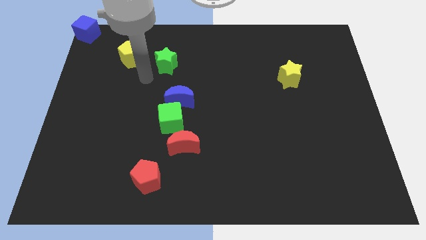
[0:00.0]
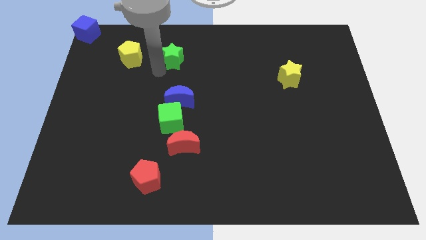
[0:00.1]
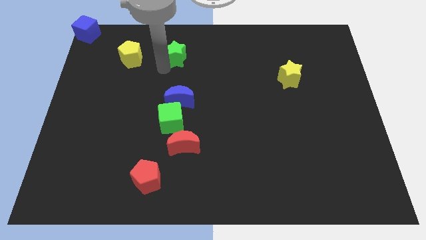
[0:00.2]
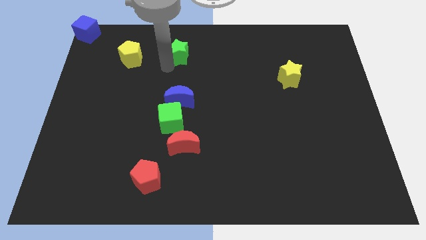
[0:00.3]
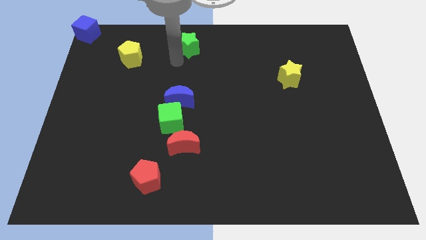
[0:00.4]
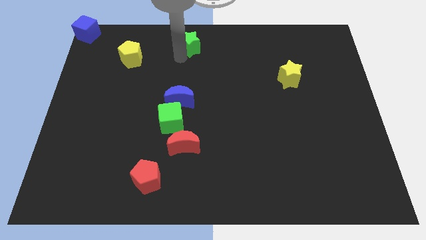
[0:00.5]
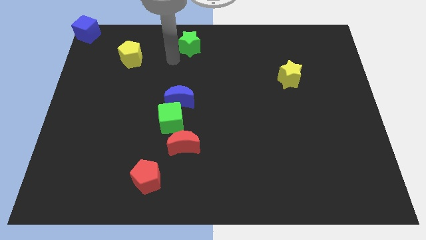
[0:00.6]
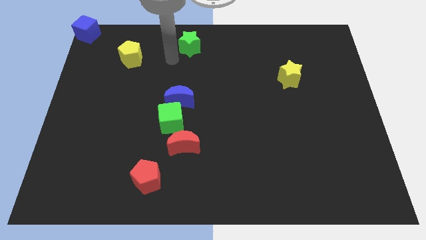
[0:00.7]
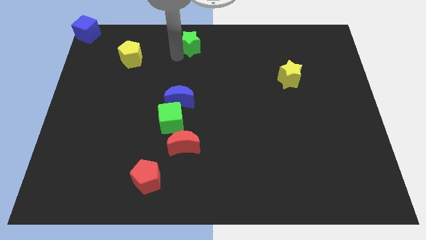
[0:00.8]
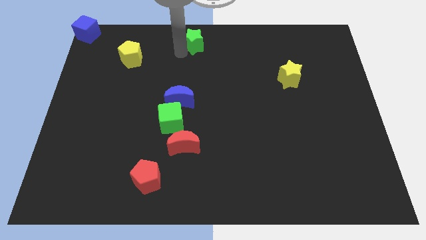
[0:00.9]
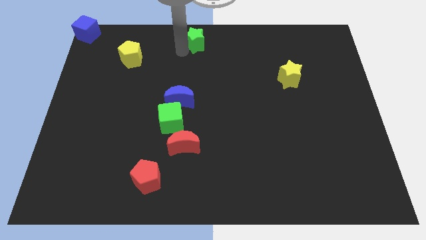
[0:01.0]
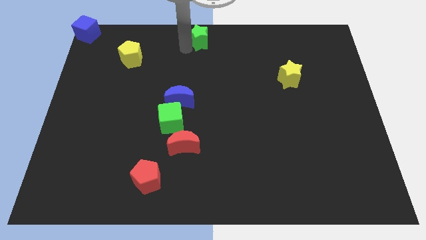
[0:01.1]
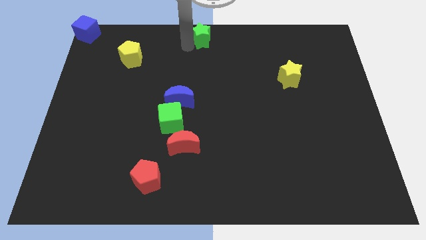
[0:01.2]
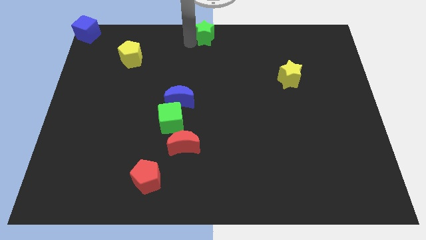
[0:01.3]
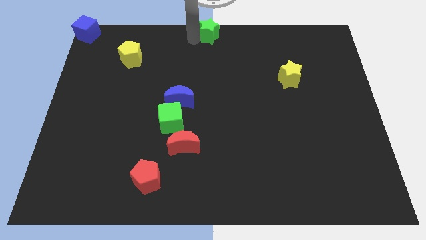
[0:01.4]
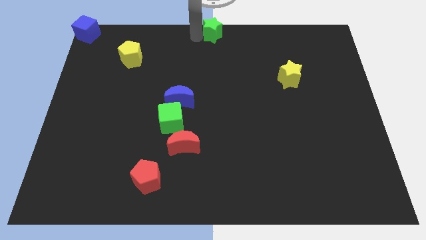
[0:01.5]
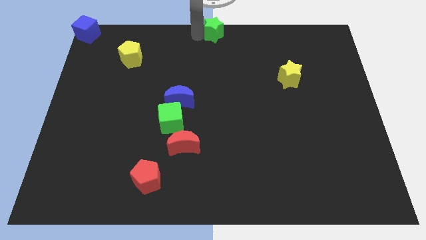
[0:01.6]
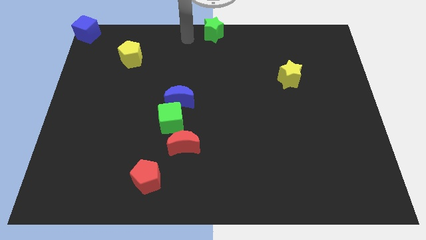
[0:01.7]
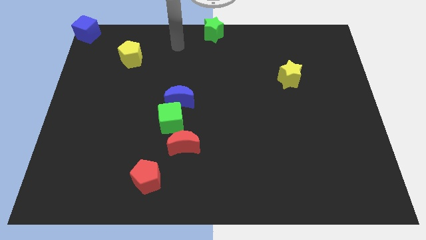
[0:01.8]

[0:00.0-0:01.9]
place the green star at top center of the board

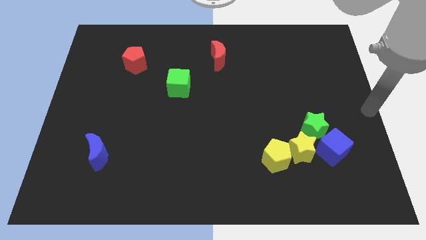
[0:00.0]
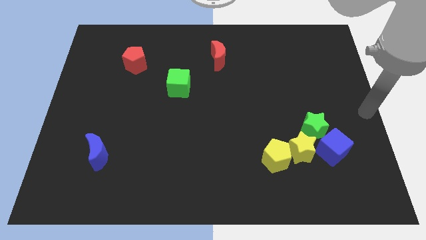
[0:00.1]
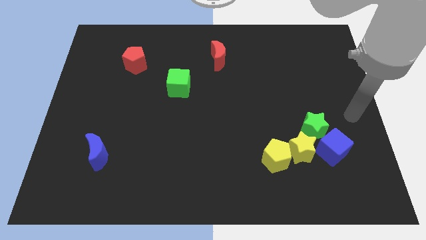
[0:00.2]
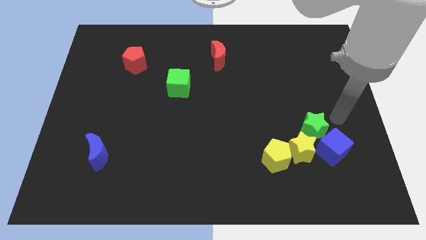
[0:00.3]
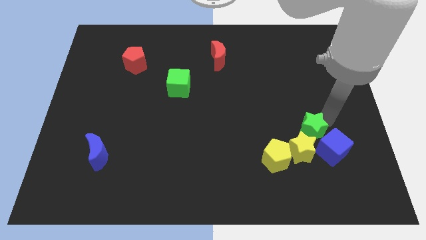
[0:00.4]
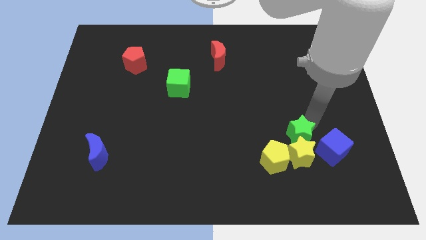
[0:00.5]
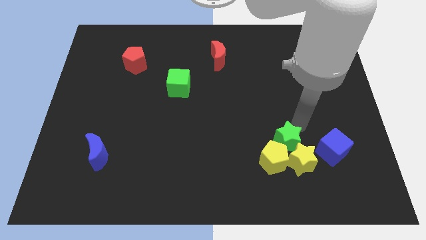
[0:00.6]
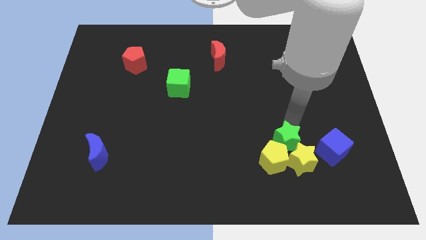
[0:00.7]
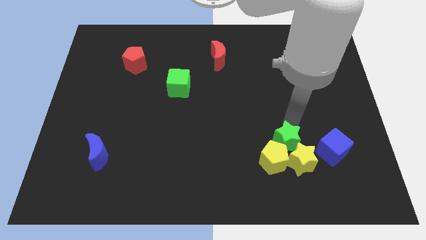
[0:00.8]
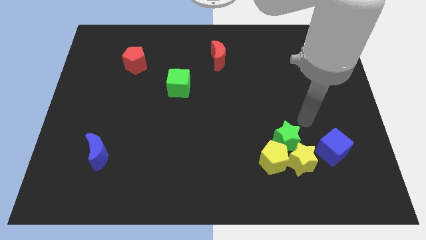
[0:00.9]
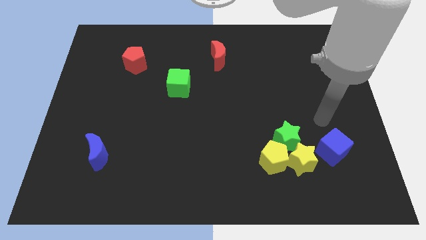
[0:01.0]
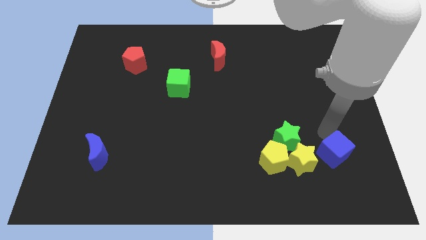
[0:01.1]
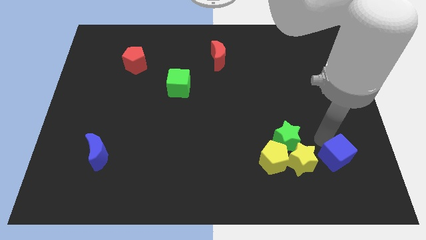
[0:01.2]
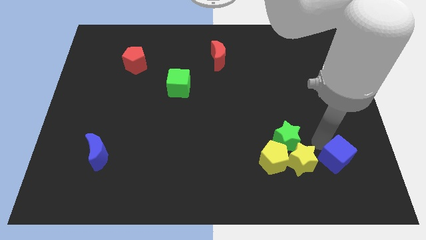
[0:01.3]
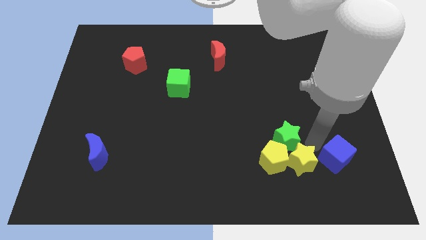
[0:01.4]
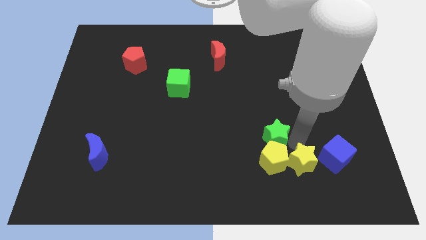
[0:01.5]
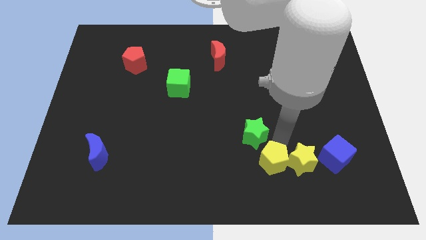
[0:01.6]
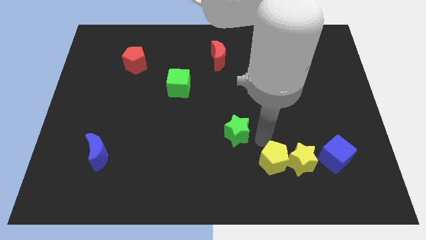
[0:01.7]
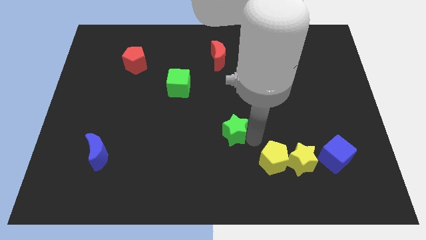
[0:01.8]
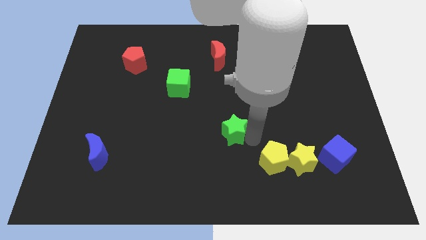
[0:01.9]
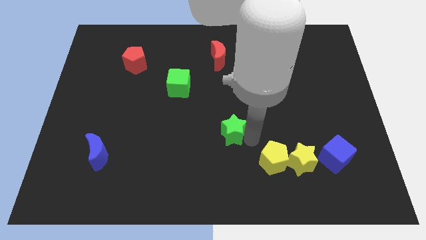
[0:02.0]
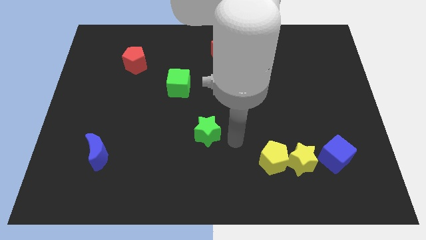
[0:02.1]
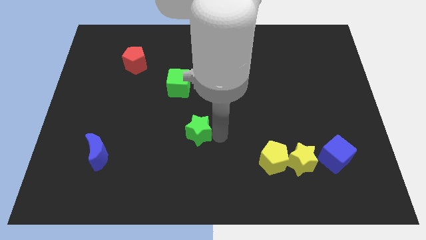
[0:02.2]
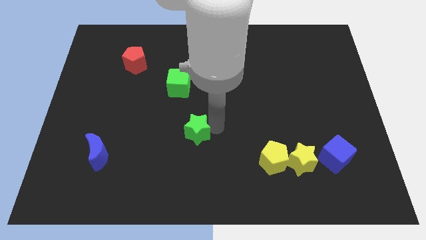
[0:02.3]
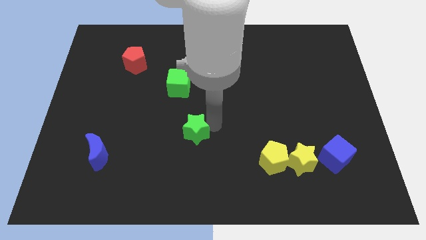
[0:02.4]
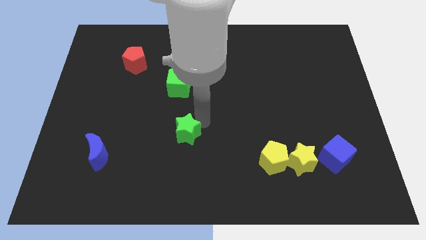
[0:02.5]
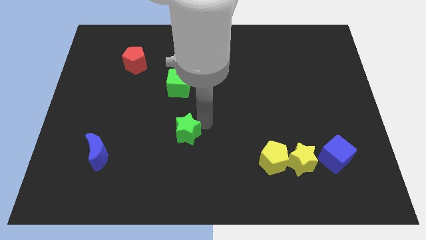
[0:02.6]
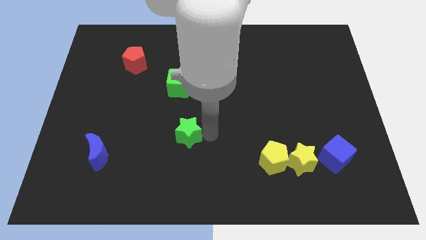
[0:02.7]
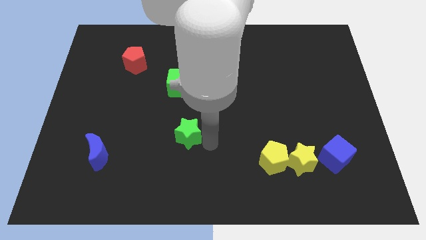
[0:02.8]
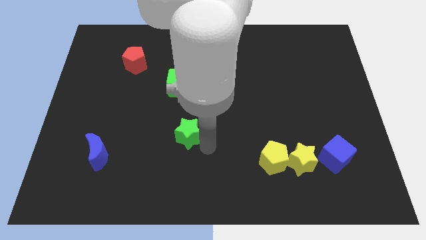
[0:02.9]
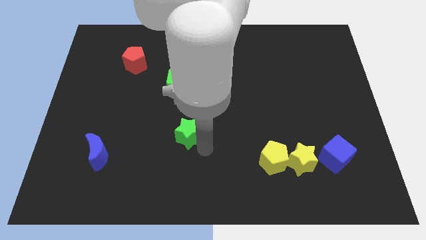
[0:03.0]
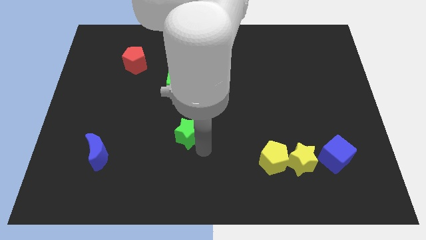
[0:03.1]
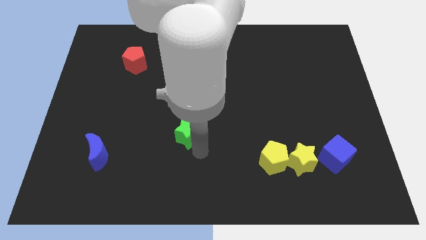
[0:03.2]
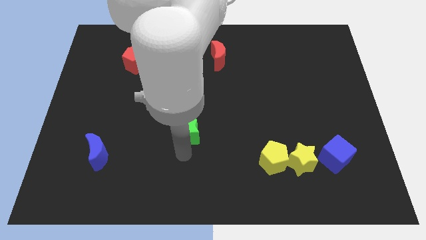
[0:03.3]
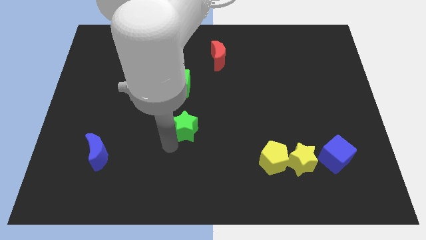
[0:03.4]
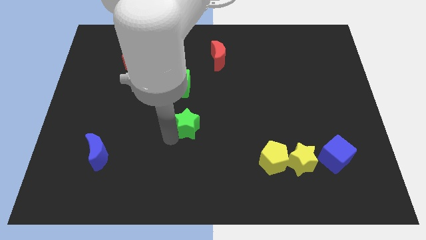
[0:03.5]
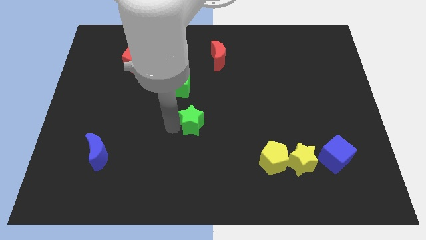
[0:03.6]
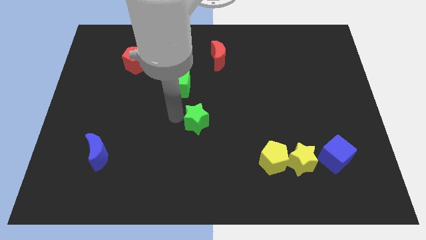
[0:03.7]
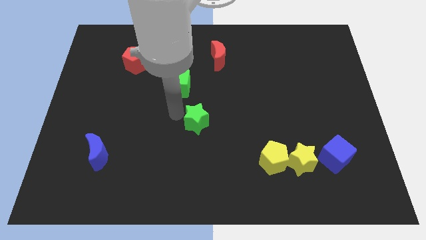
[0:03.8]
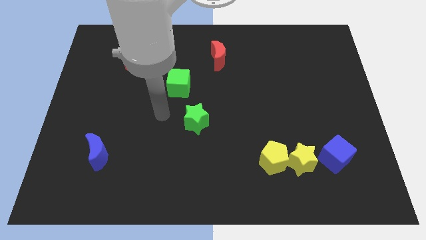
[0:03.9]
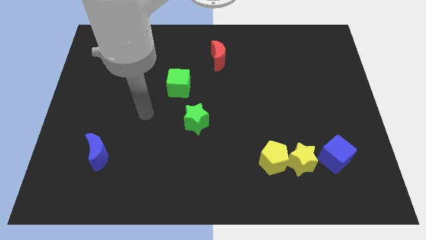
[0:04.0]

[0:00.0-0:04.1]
slide green star to the bottom right of green cube

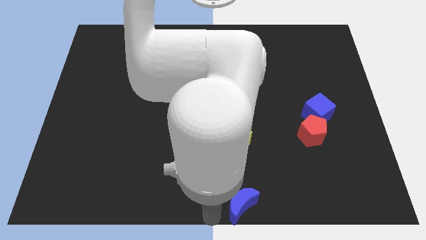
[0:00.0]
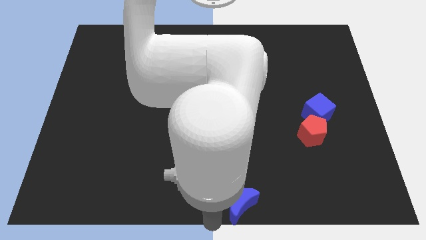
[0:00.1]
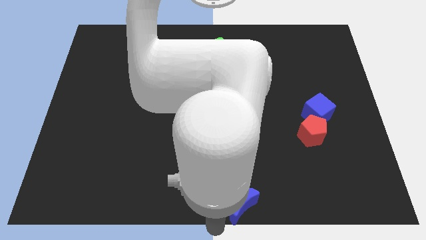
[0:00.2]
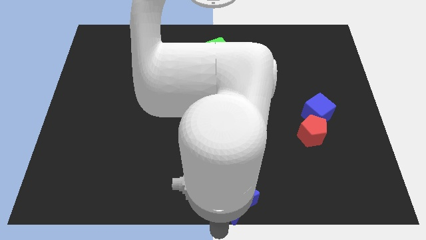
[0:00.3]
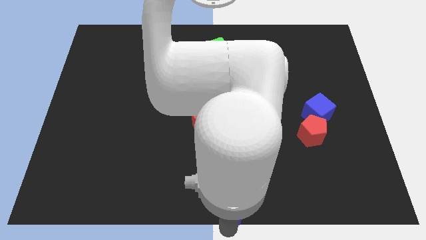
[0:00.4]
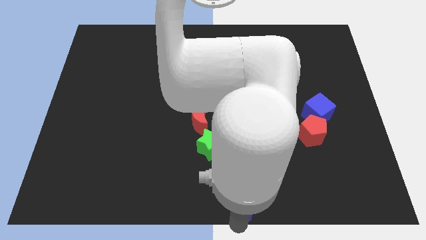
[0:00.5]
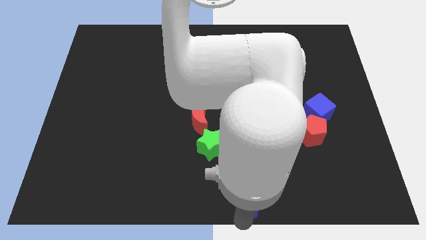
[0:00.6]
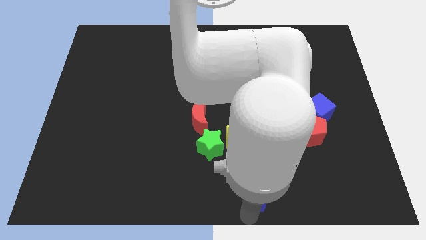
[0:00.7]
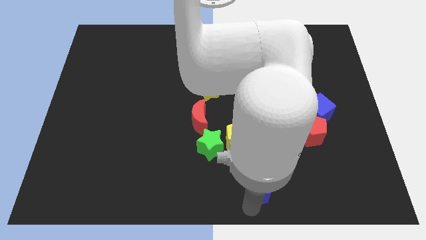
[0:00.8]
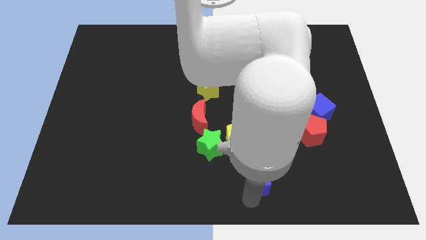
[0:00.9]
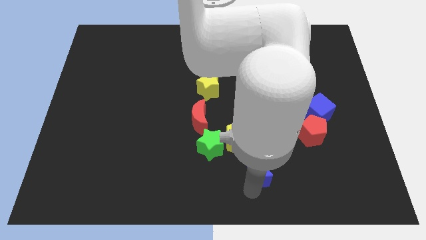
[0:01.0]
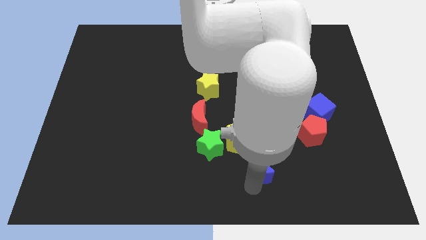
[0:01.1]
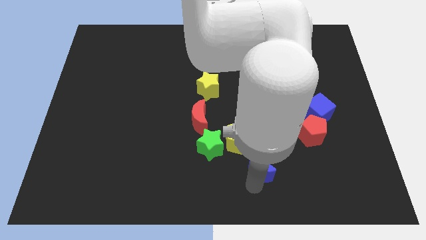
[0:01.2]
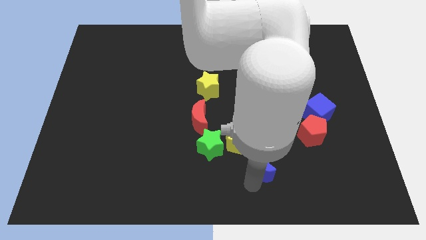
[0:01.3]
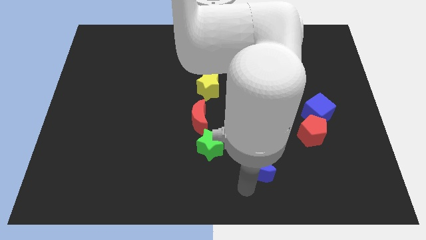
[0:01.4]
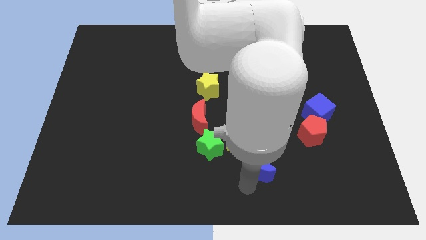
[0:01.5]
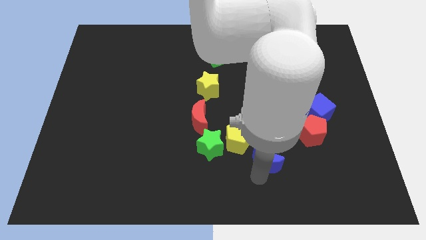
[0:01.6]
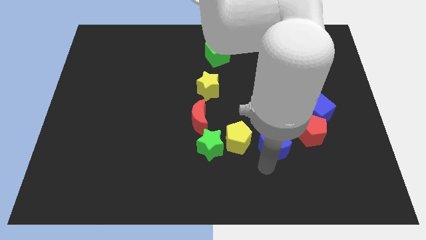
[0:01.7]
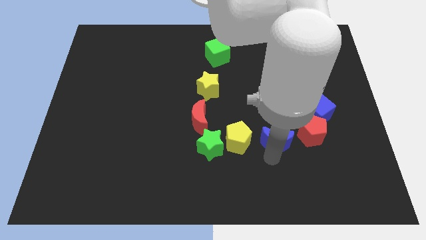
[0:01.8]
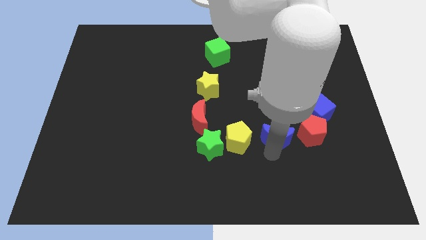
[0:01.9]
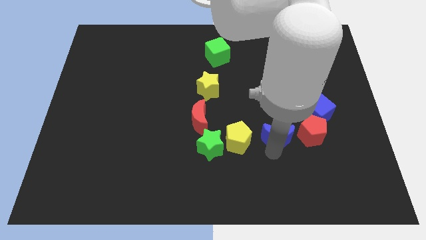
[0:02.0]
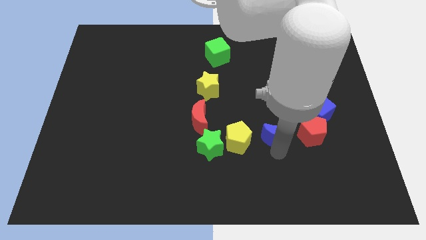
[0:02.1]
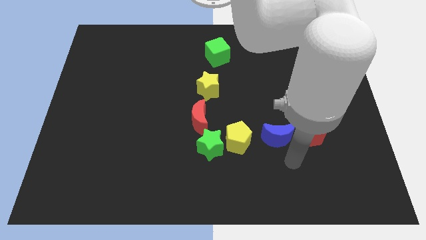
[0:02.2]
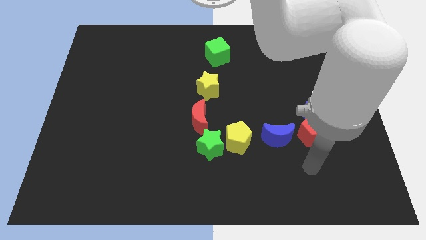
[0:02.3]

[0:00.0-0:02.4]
move the blue crescent in between red pentagon and yellow pentagon

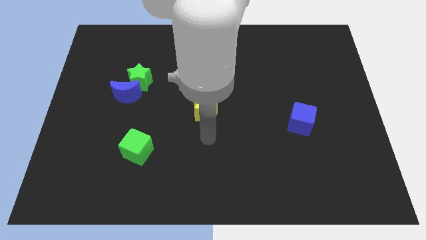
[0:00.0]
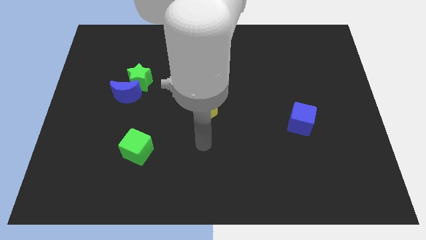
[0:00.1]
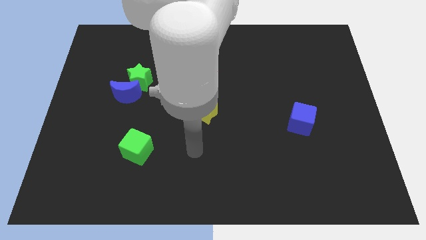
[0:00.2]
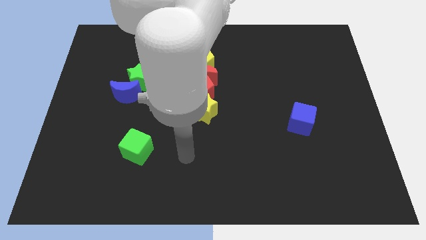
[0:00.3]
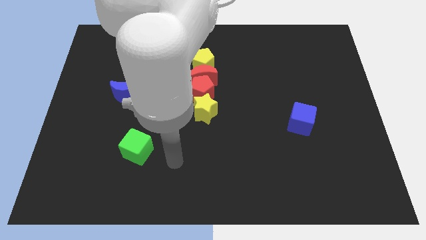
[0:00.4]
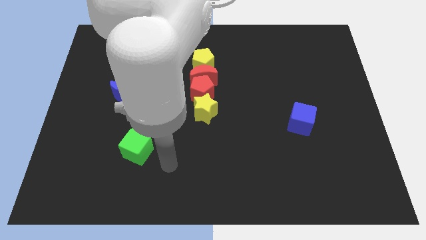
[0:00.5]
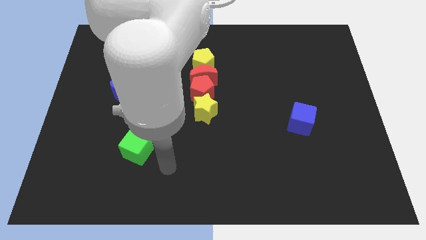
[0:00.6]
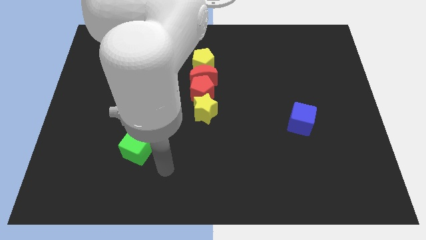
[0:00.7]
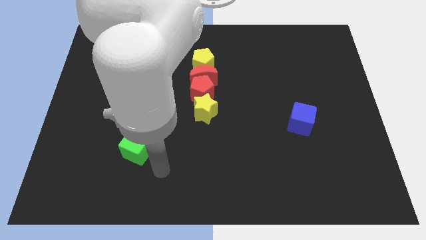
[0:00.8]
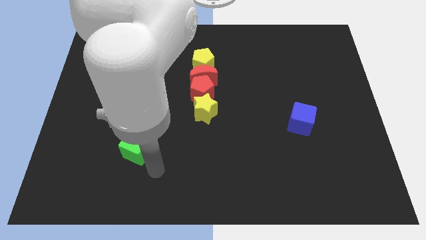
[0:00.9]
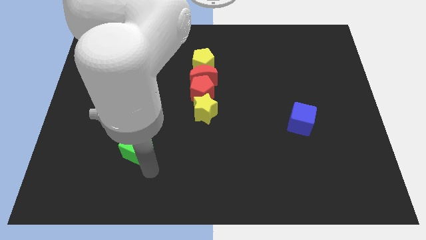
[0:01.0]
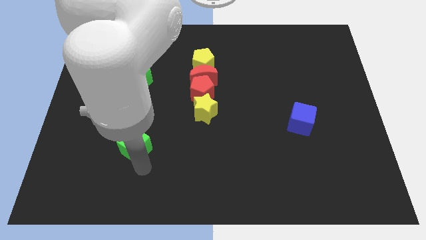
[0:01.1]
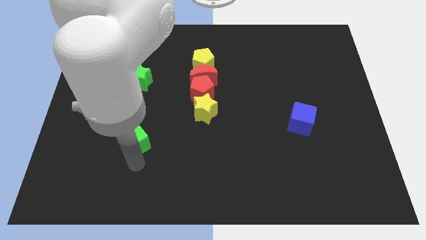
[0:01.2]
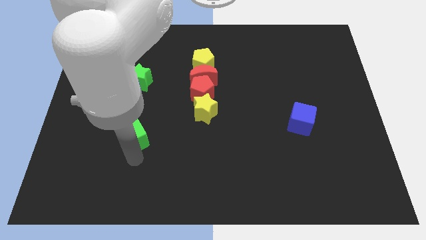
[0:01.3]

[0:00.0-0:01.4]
place the arm close to the green cube
